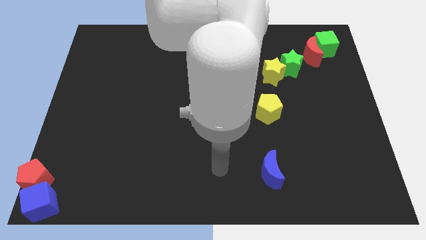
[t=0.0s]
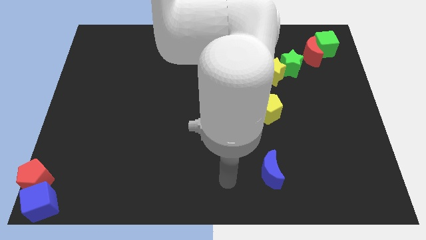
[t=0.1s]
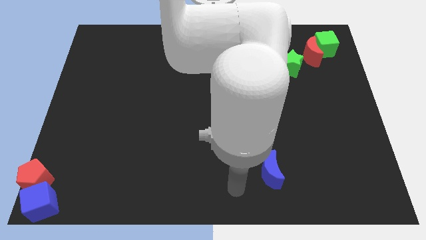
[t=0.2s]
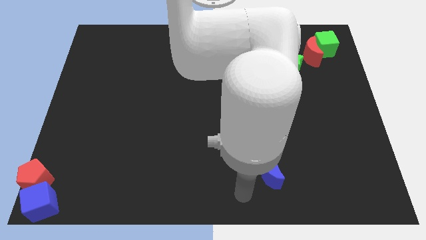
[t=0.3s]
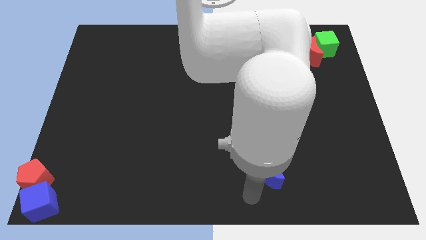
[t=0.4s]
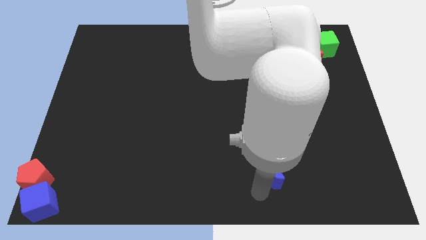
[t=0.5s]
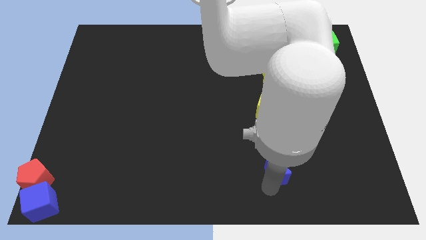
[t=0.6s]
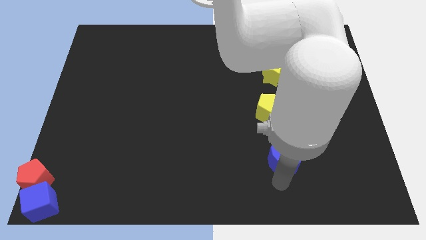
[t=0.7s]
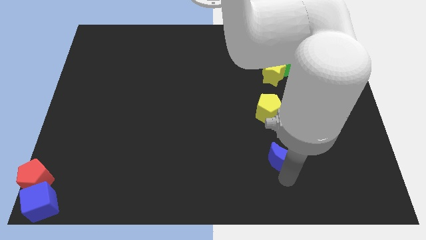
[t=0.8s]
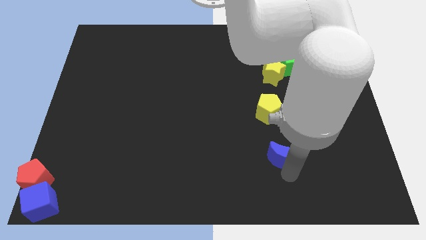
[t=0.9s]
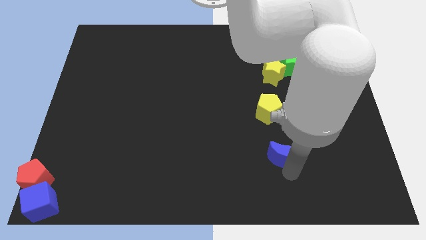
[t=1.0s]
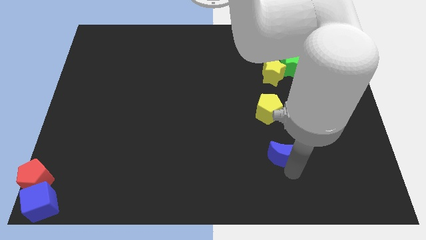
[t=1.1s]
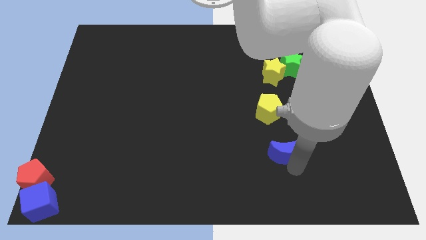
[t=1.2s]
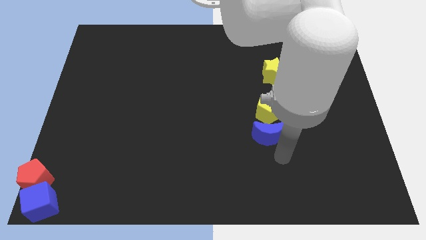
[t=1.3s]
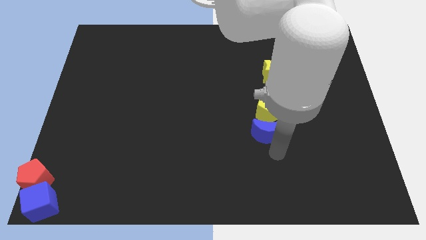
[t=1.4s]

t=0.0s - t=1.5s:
slide the blue moon below the yellow pentagon

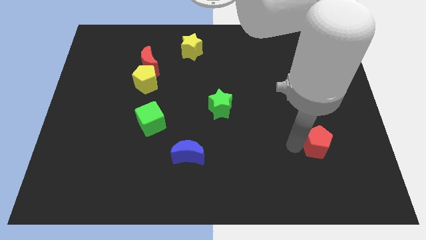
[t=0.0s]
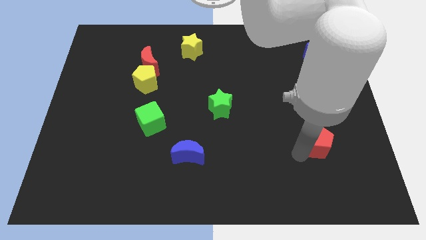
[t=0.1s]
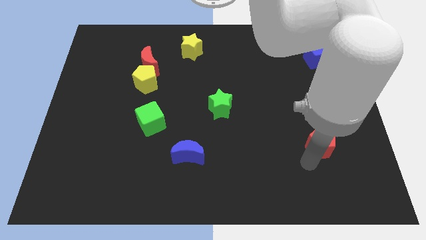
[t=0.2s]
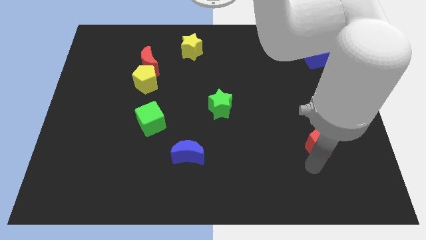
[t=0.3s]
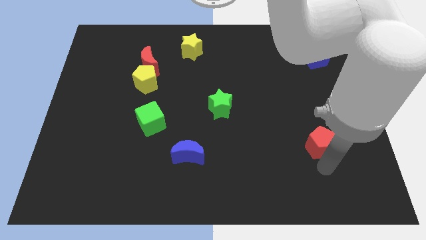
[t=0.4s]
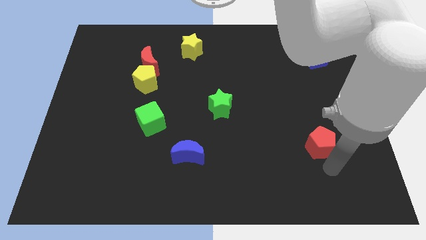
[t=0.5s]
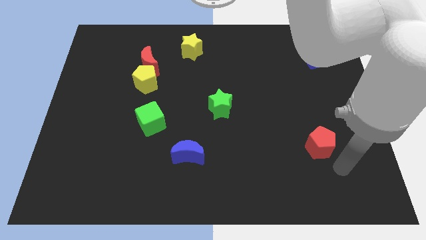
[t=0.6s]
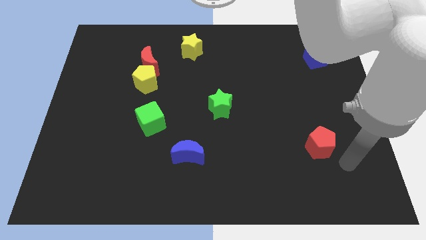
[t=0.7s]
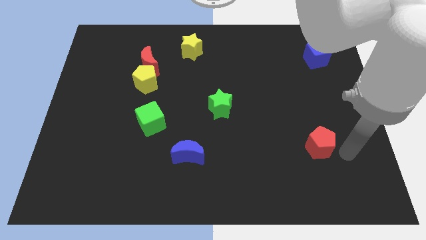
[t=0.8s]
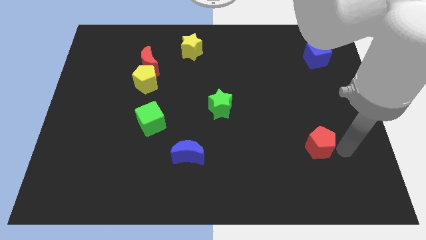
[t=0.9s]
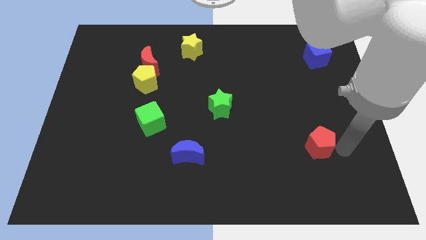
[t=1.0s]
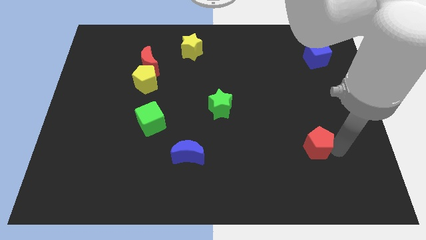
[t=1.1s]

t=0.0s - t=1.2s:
place the arm right to the red pentagon

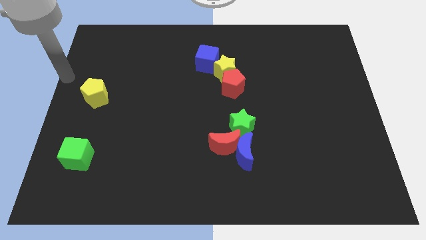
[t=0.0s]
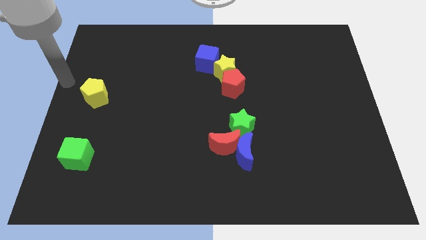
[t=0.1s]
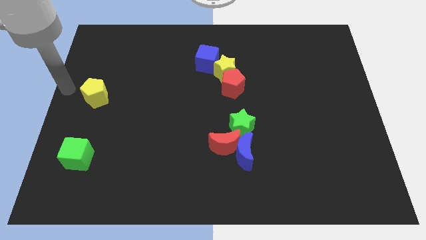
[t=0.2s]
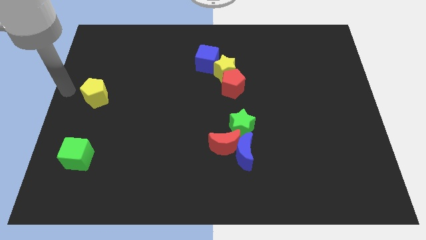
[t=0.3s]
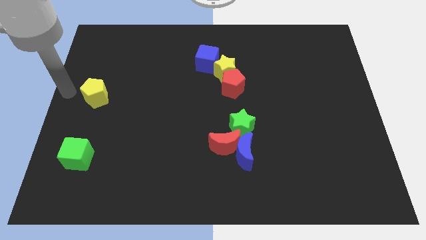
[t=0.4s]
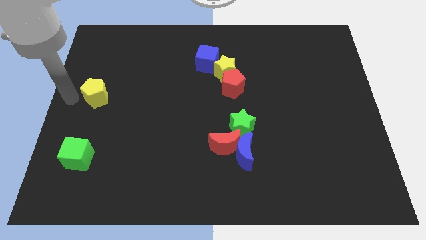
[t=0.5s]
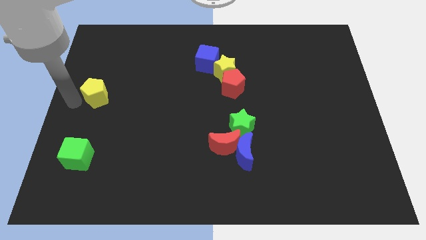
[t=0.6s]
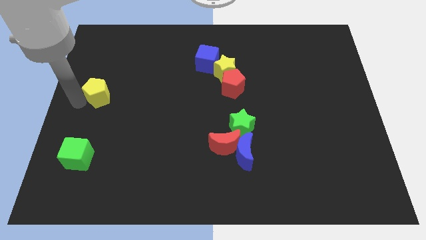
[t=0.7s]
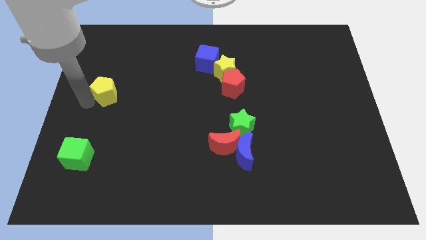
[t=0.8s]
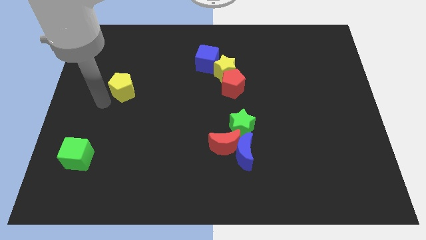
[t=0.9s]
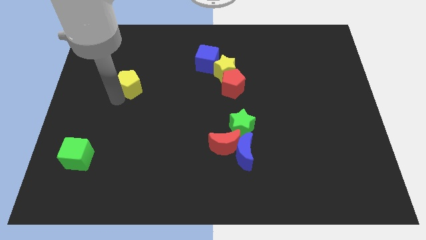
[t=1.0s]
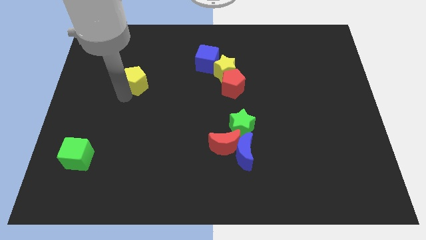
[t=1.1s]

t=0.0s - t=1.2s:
slide yellow pentagon to the right

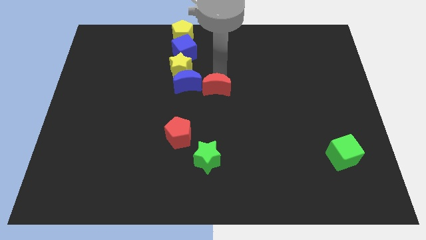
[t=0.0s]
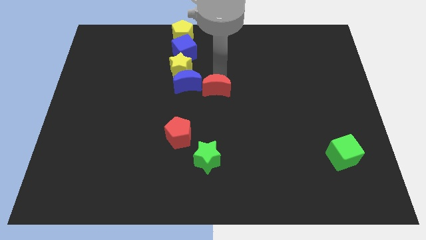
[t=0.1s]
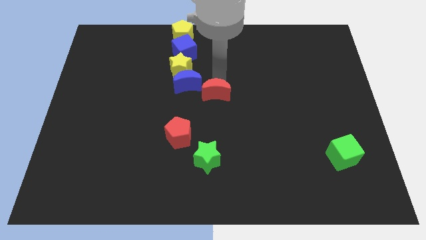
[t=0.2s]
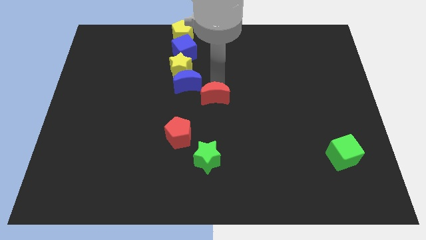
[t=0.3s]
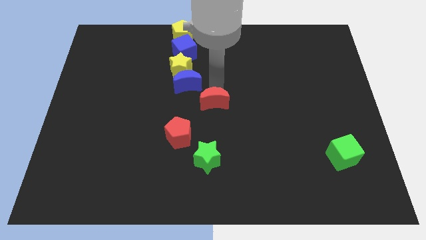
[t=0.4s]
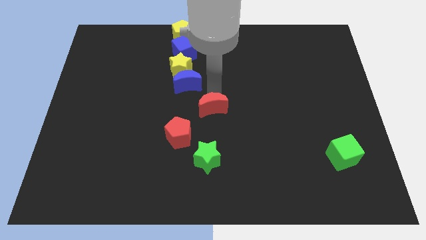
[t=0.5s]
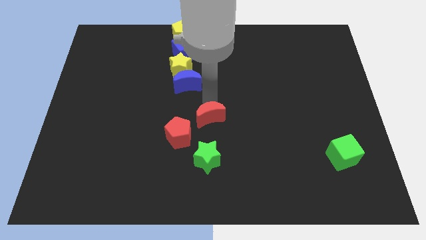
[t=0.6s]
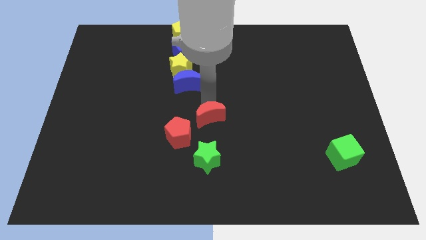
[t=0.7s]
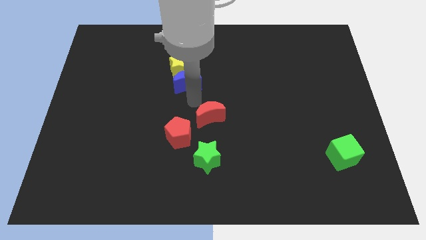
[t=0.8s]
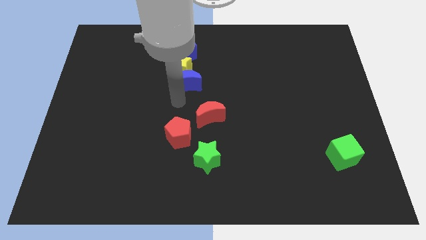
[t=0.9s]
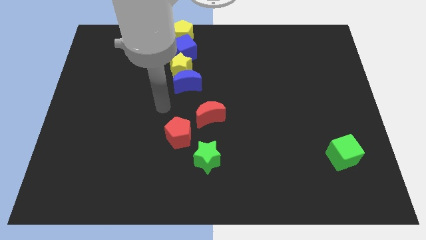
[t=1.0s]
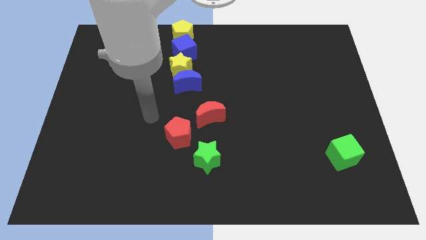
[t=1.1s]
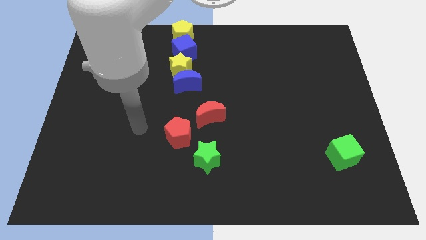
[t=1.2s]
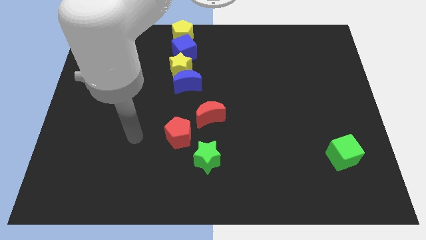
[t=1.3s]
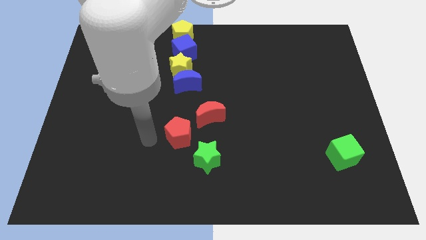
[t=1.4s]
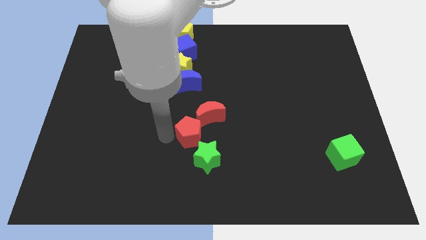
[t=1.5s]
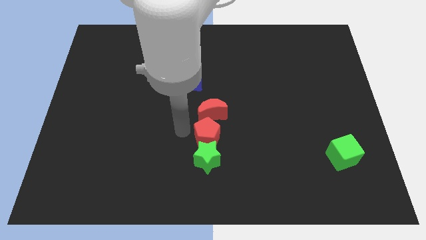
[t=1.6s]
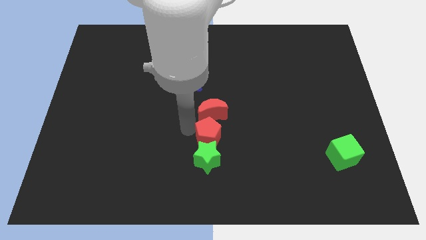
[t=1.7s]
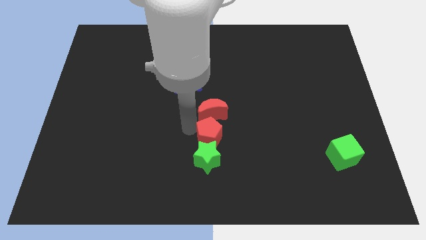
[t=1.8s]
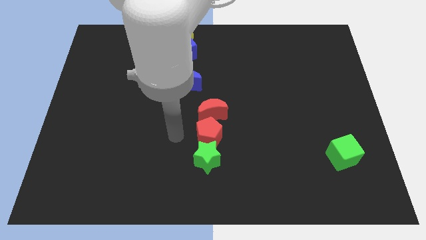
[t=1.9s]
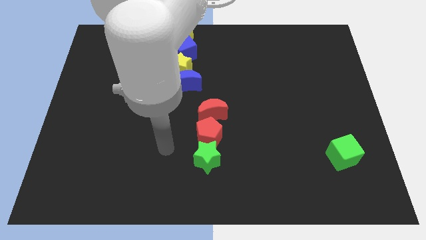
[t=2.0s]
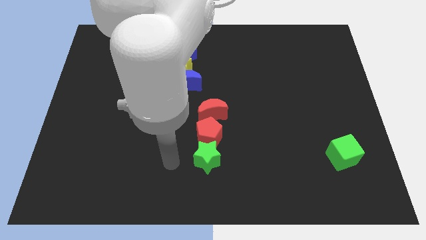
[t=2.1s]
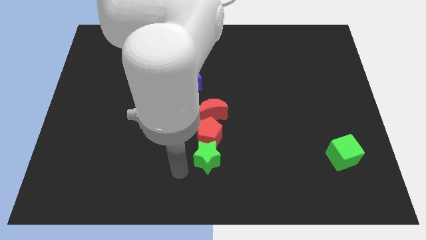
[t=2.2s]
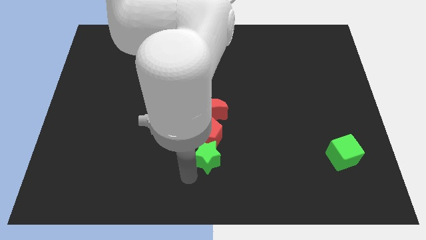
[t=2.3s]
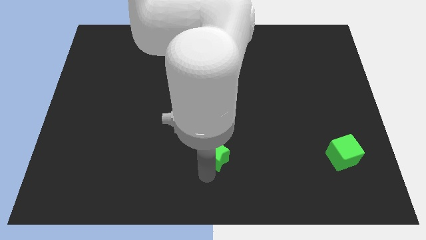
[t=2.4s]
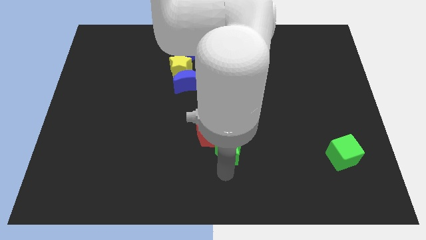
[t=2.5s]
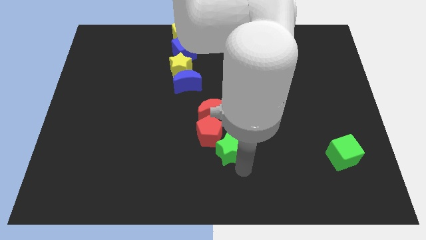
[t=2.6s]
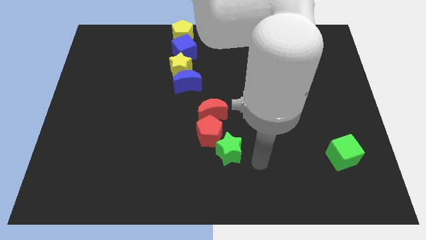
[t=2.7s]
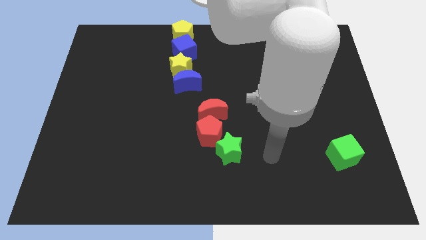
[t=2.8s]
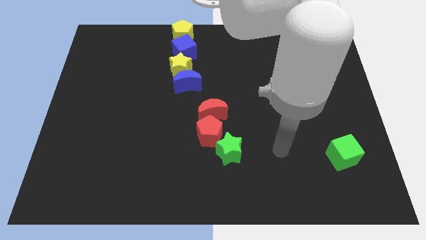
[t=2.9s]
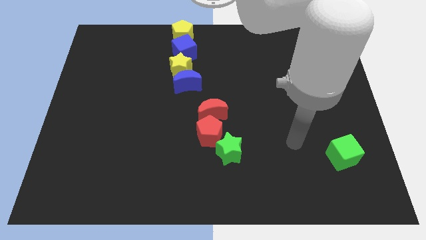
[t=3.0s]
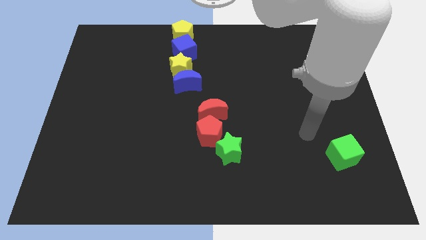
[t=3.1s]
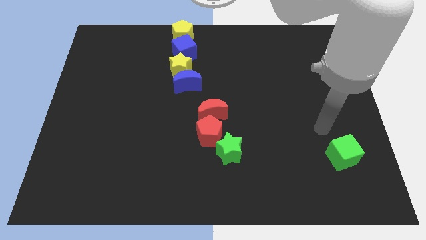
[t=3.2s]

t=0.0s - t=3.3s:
place red blocks close to green star

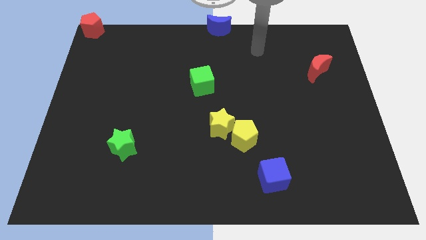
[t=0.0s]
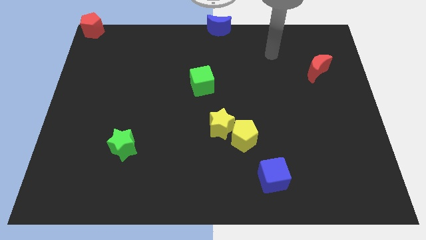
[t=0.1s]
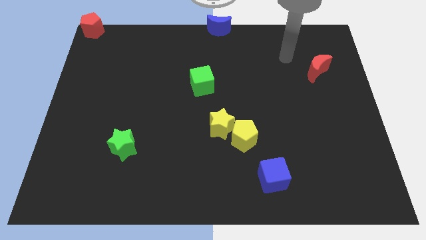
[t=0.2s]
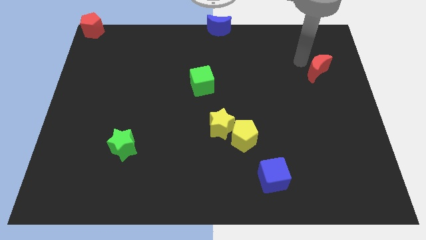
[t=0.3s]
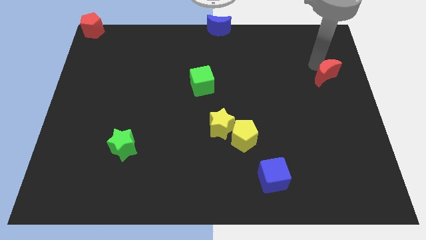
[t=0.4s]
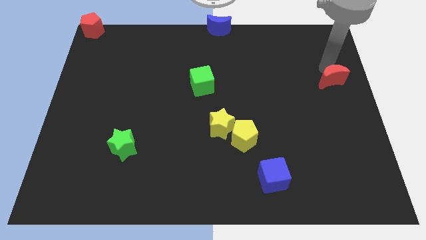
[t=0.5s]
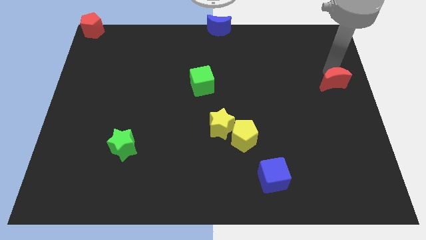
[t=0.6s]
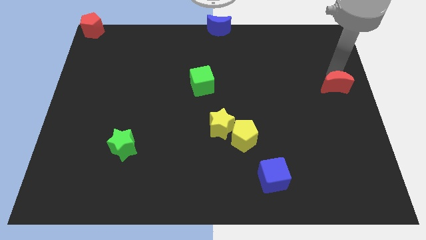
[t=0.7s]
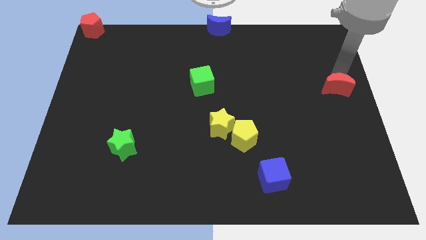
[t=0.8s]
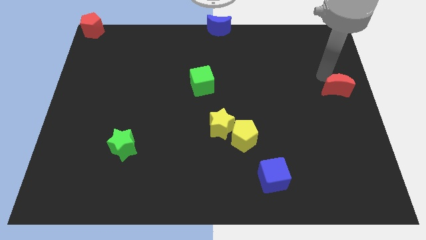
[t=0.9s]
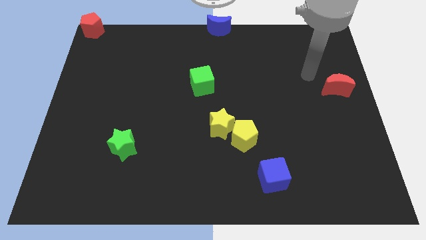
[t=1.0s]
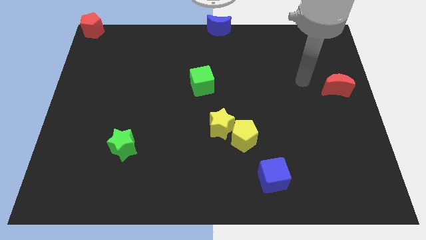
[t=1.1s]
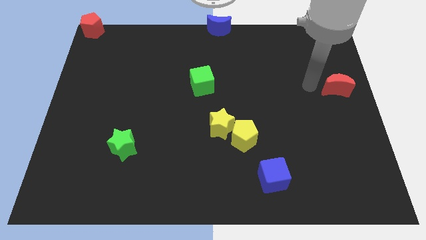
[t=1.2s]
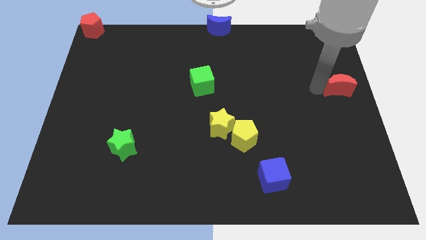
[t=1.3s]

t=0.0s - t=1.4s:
move the red crescent slightly downwards

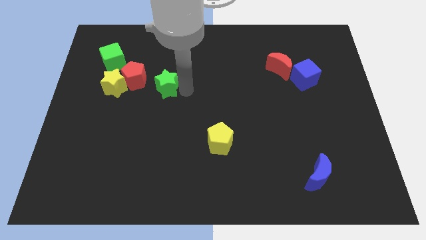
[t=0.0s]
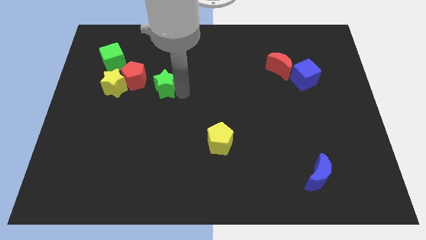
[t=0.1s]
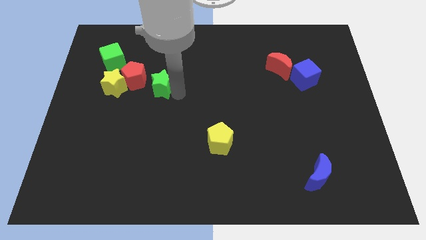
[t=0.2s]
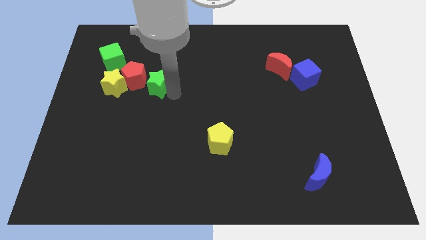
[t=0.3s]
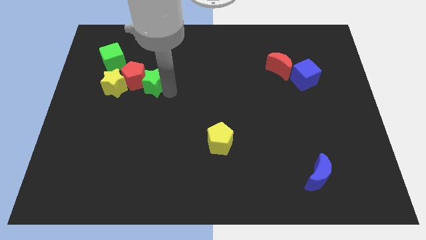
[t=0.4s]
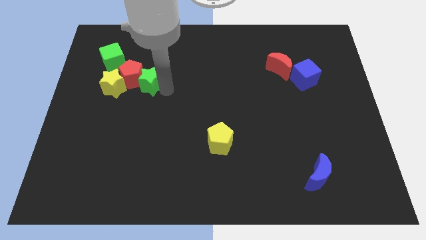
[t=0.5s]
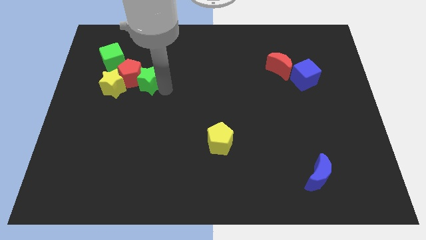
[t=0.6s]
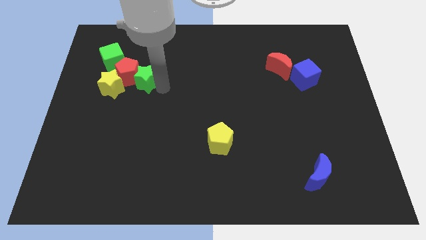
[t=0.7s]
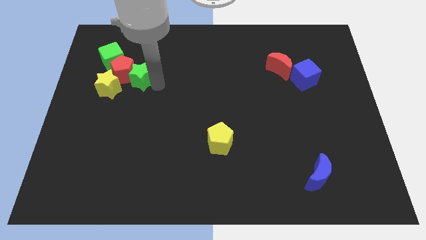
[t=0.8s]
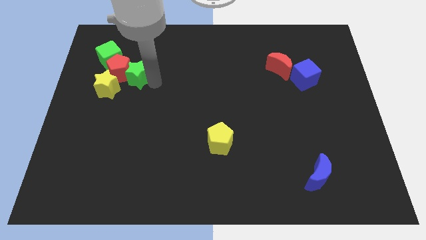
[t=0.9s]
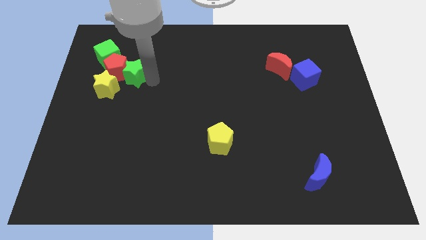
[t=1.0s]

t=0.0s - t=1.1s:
push the green star into red pentagon
